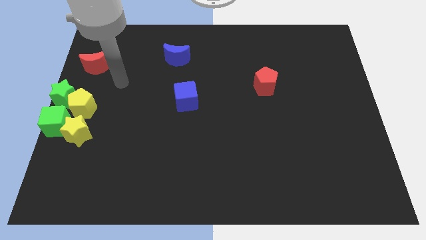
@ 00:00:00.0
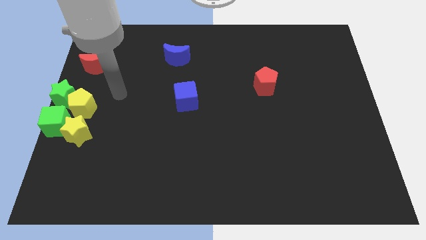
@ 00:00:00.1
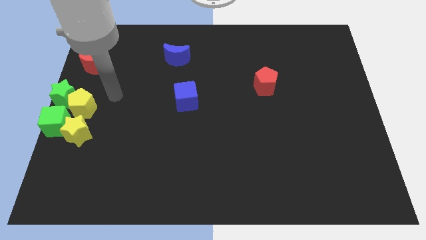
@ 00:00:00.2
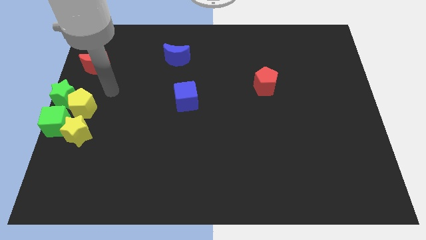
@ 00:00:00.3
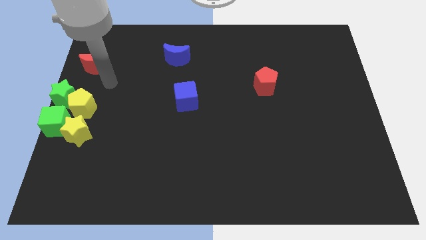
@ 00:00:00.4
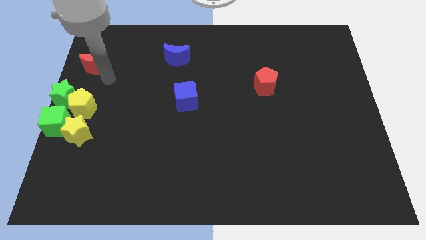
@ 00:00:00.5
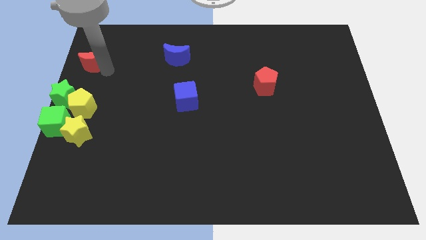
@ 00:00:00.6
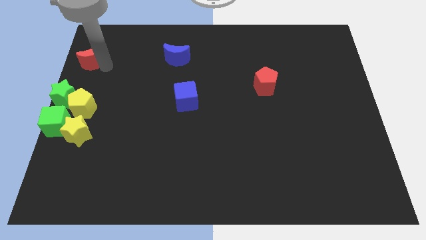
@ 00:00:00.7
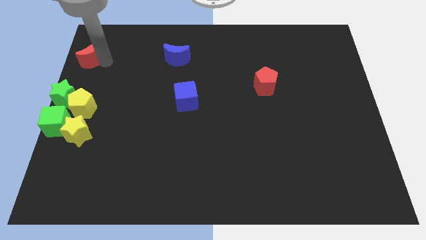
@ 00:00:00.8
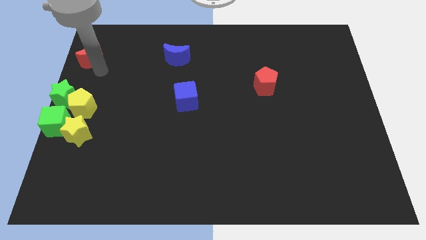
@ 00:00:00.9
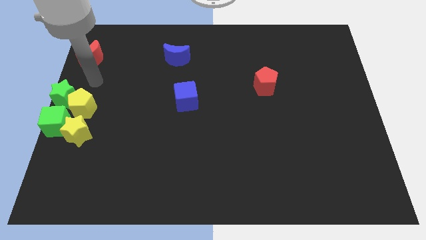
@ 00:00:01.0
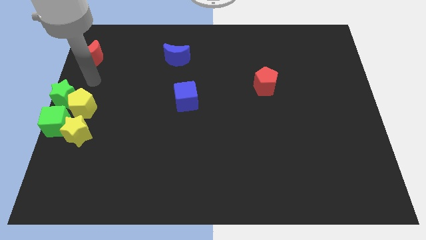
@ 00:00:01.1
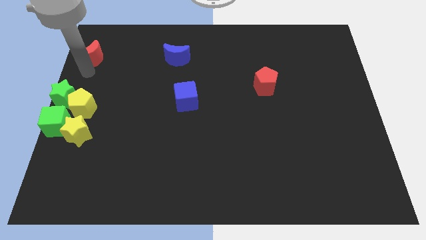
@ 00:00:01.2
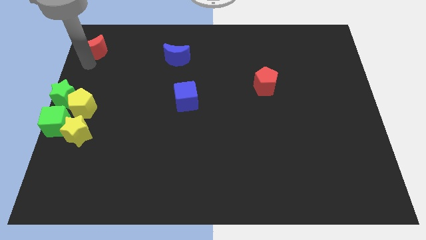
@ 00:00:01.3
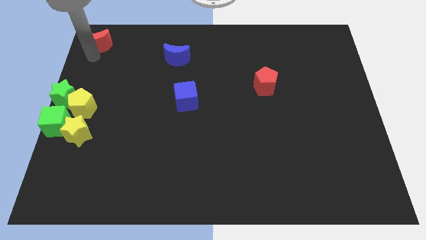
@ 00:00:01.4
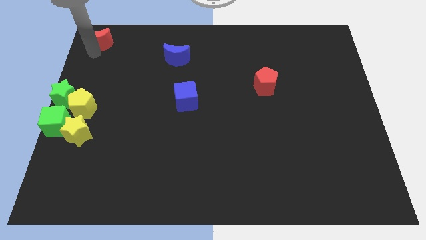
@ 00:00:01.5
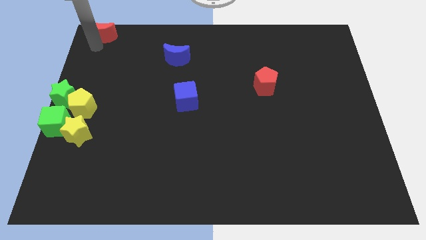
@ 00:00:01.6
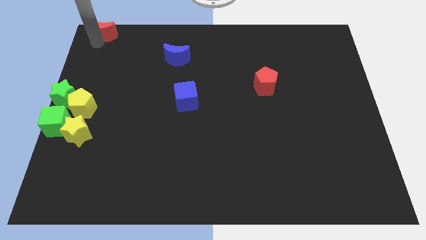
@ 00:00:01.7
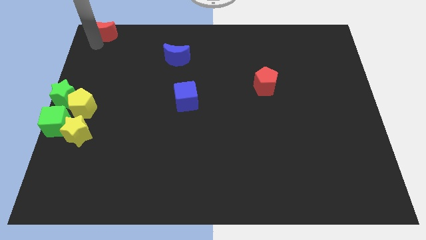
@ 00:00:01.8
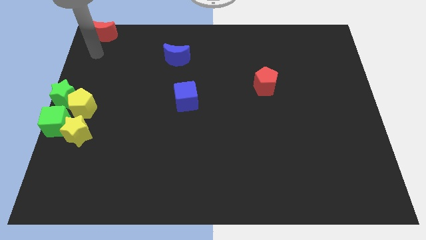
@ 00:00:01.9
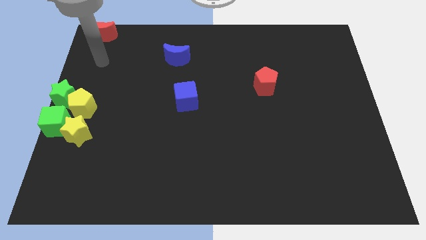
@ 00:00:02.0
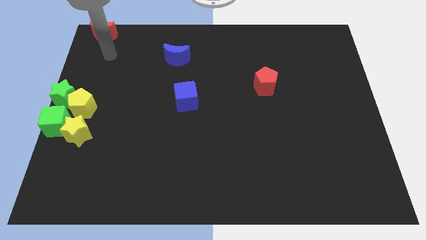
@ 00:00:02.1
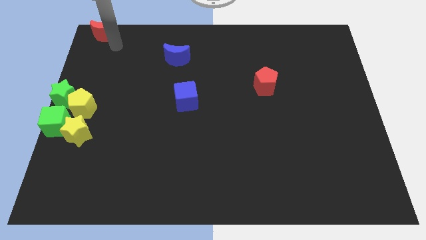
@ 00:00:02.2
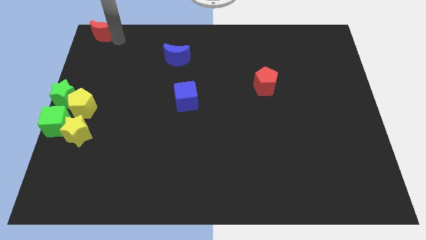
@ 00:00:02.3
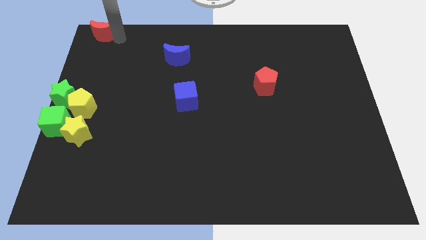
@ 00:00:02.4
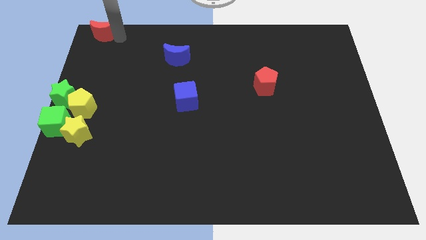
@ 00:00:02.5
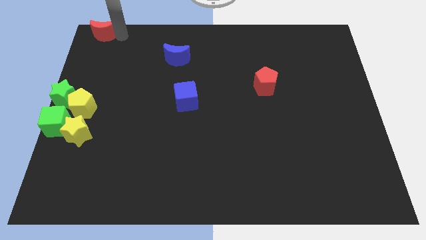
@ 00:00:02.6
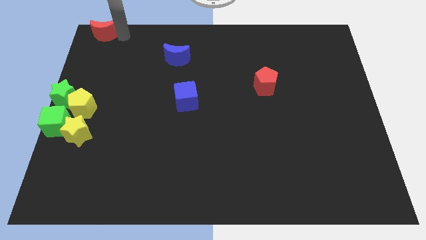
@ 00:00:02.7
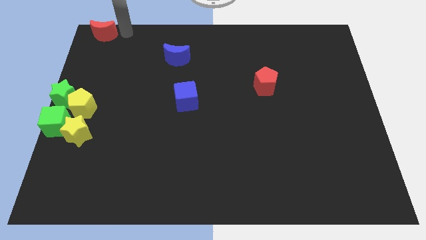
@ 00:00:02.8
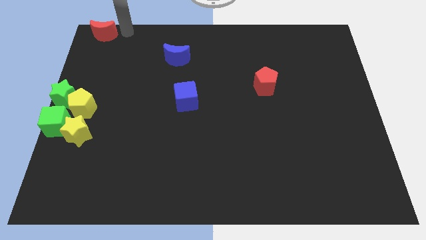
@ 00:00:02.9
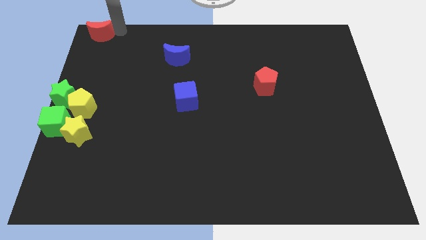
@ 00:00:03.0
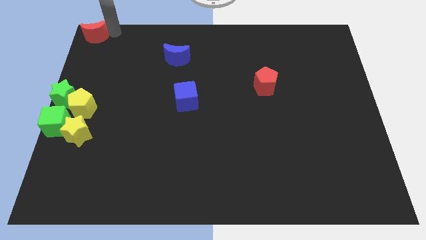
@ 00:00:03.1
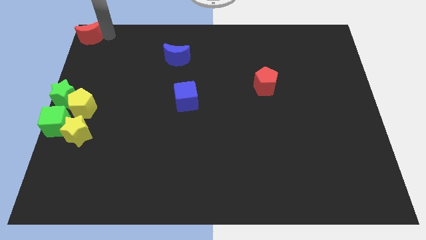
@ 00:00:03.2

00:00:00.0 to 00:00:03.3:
move the red crescent to the top left corner of the board

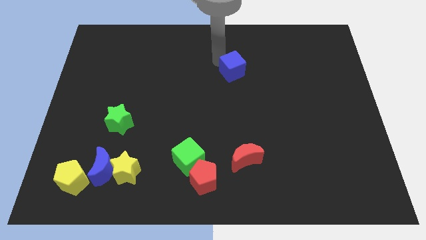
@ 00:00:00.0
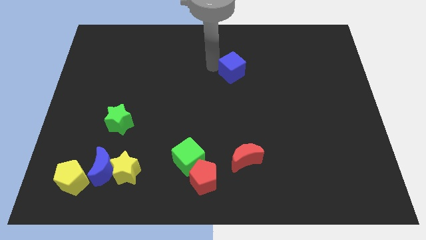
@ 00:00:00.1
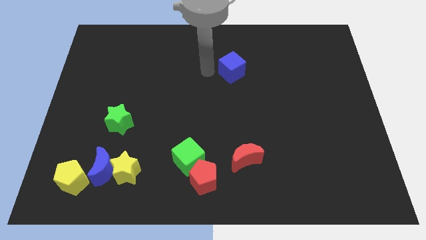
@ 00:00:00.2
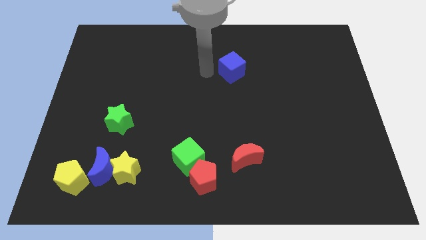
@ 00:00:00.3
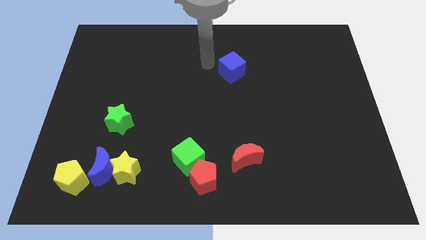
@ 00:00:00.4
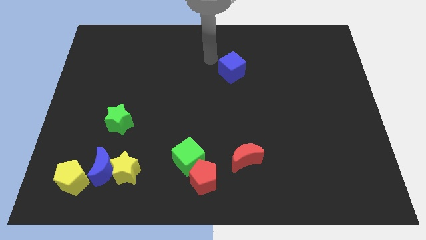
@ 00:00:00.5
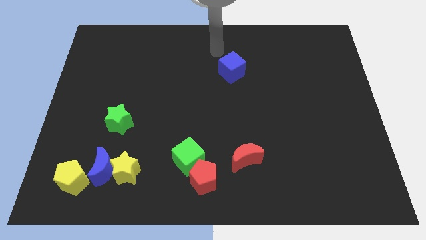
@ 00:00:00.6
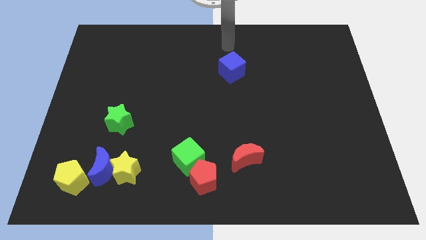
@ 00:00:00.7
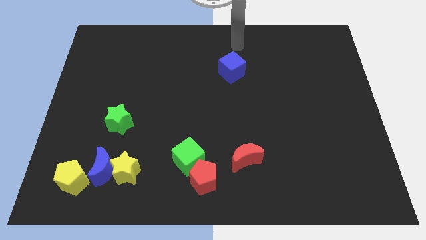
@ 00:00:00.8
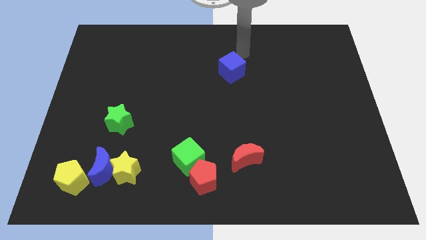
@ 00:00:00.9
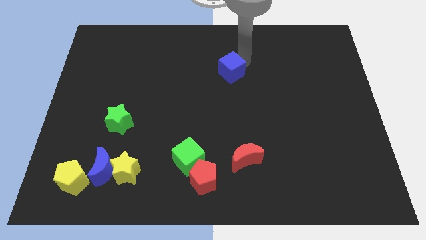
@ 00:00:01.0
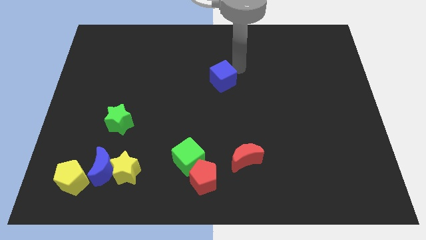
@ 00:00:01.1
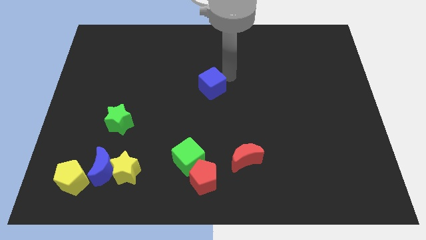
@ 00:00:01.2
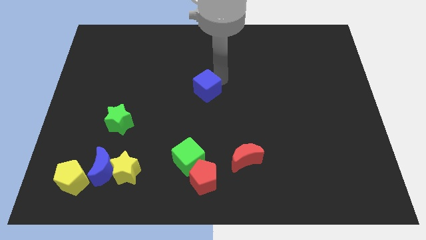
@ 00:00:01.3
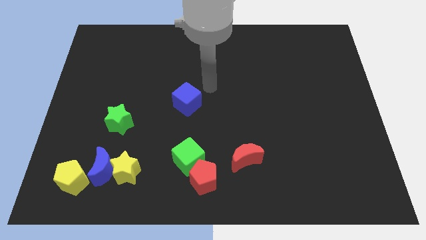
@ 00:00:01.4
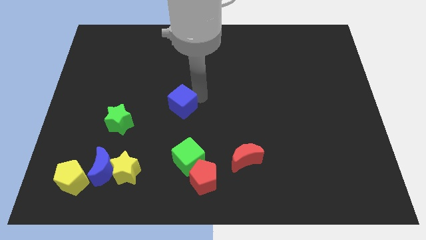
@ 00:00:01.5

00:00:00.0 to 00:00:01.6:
move the blue cube to the top side of the green cube

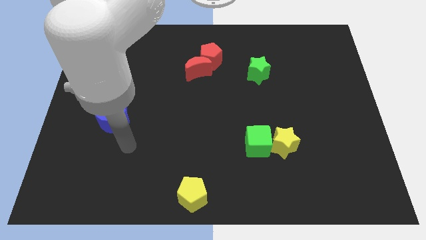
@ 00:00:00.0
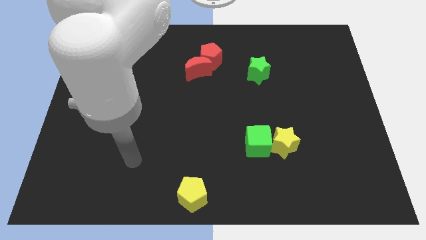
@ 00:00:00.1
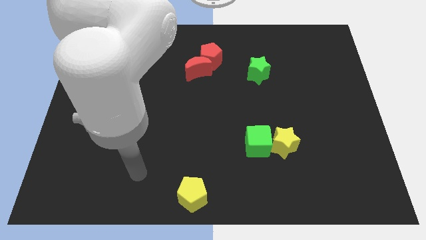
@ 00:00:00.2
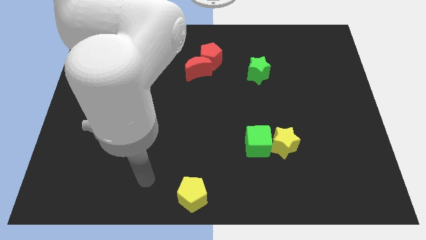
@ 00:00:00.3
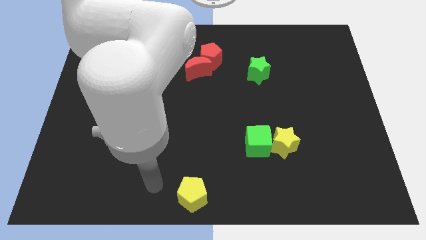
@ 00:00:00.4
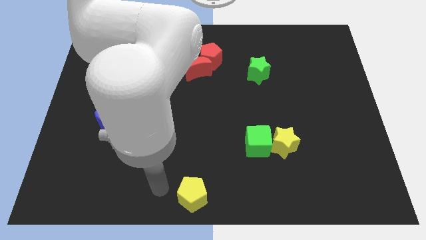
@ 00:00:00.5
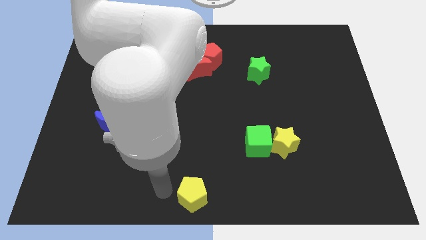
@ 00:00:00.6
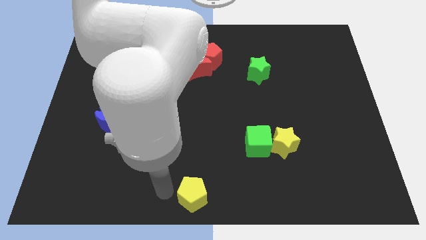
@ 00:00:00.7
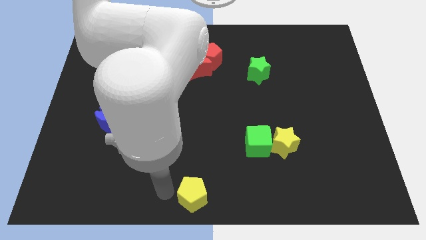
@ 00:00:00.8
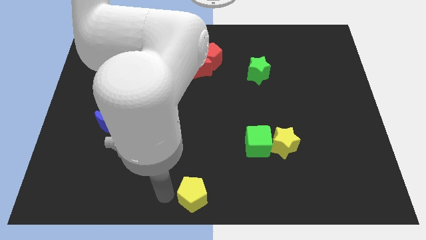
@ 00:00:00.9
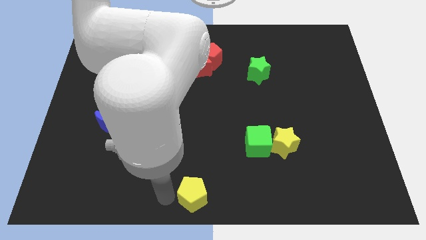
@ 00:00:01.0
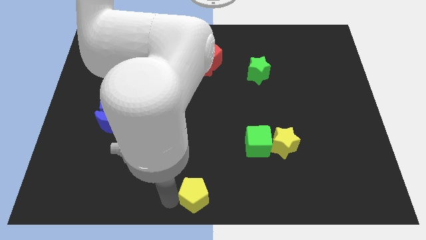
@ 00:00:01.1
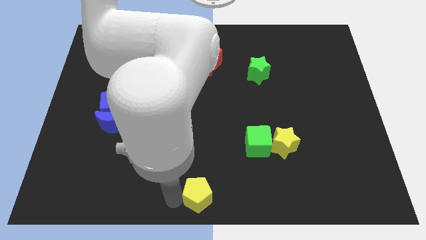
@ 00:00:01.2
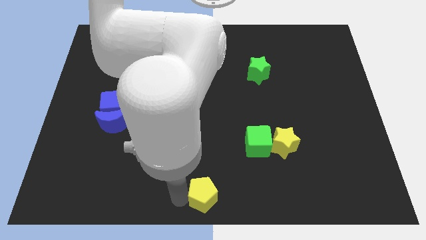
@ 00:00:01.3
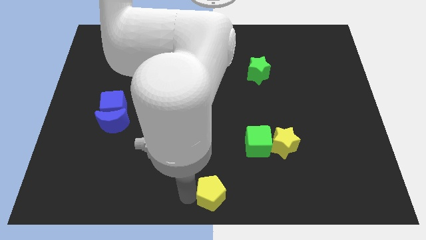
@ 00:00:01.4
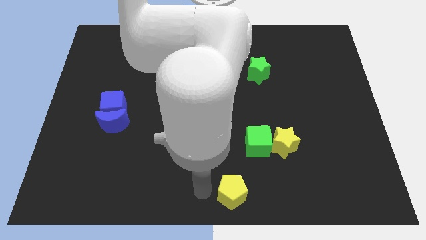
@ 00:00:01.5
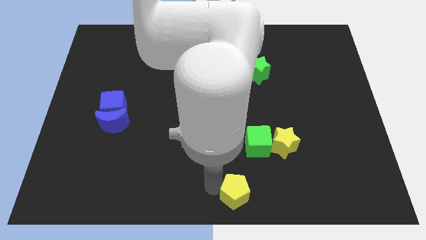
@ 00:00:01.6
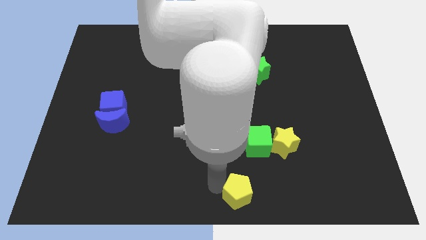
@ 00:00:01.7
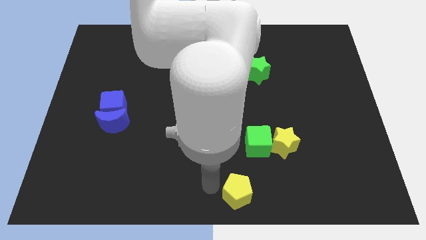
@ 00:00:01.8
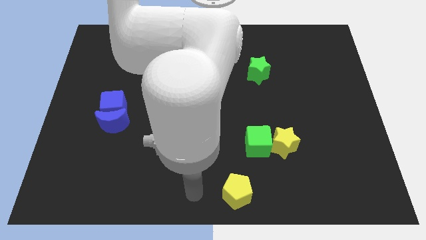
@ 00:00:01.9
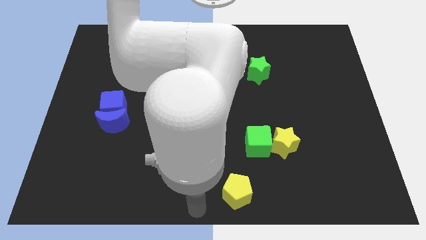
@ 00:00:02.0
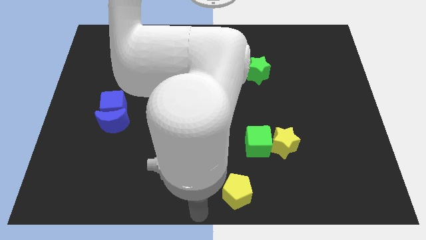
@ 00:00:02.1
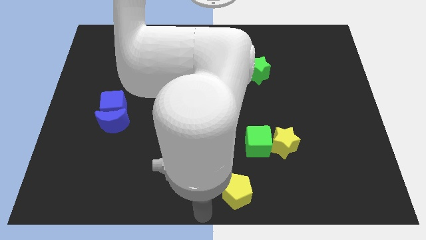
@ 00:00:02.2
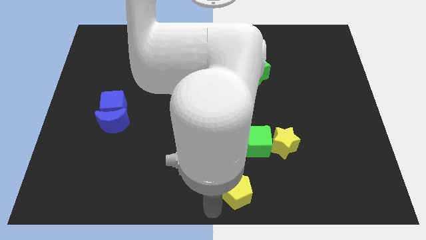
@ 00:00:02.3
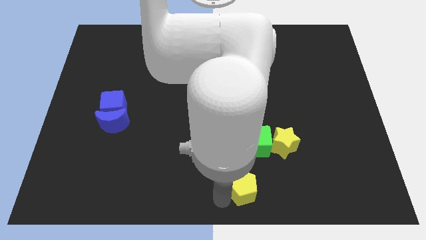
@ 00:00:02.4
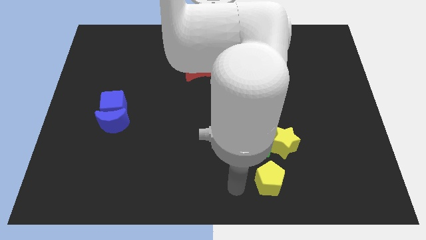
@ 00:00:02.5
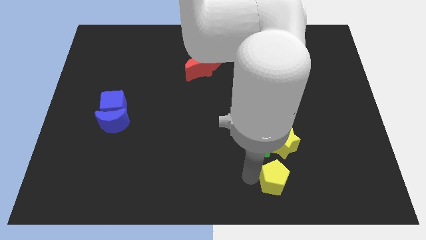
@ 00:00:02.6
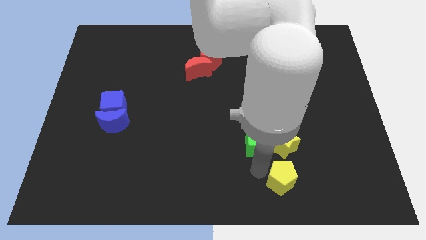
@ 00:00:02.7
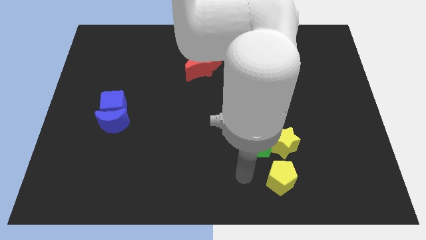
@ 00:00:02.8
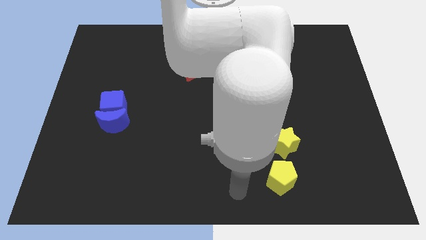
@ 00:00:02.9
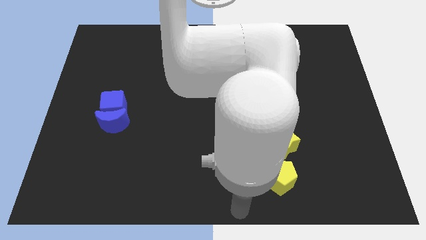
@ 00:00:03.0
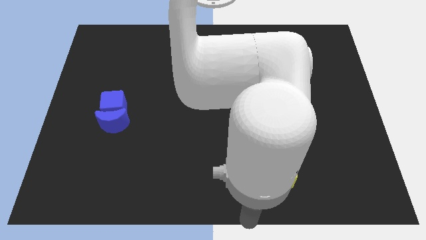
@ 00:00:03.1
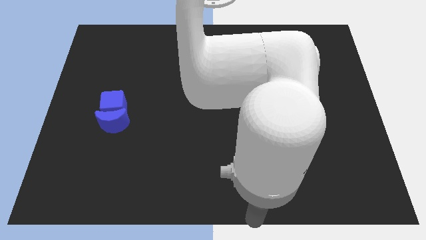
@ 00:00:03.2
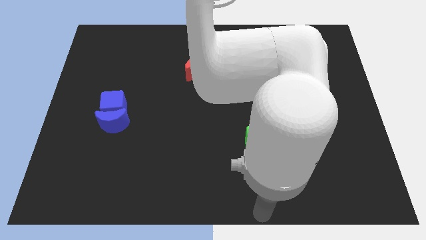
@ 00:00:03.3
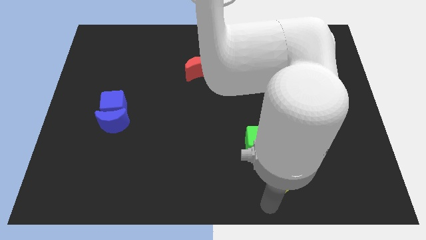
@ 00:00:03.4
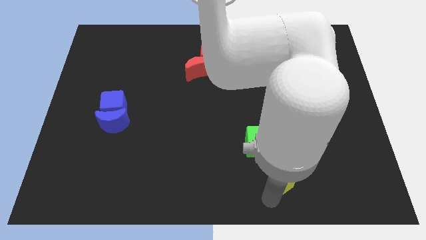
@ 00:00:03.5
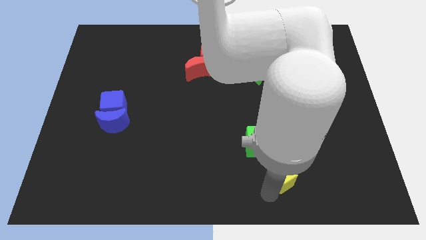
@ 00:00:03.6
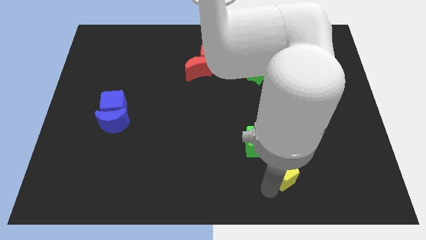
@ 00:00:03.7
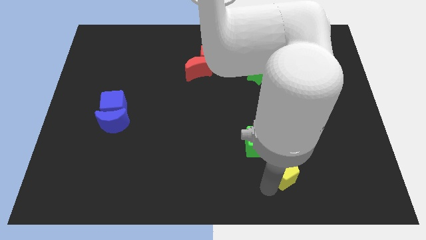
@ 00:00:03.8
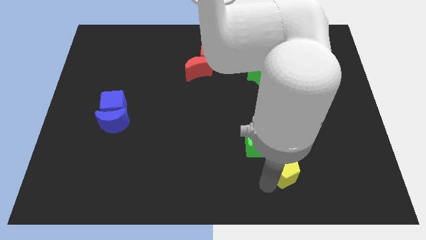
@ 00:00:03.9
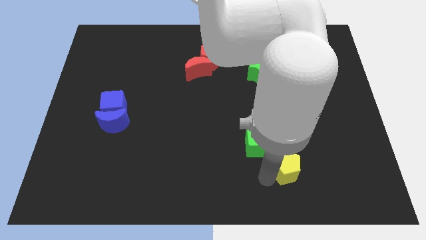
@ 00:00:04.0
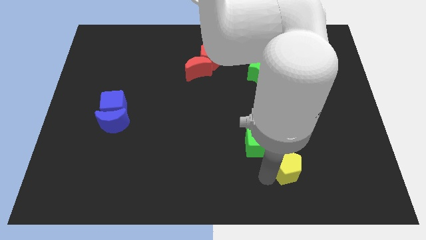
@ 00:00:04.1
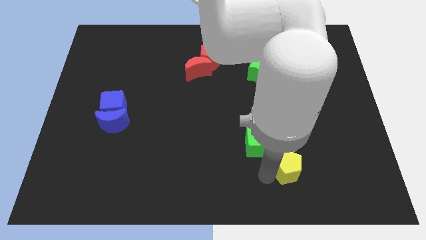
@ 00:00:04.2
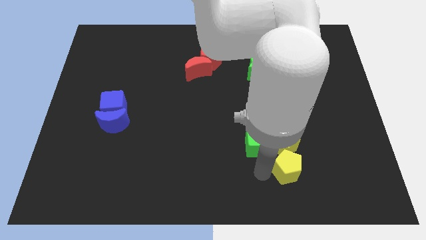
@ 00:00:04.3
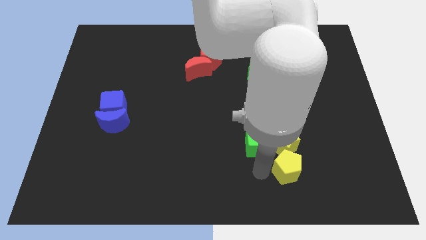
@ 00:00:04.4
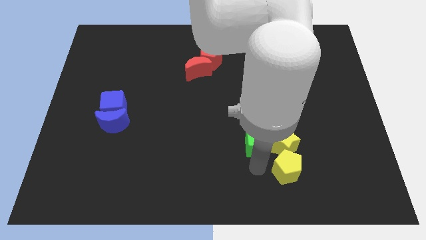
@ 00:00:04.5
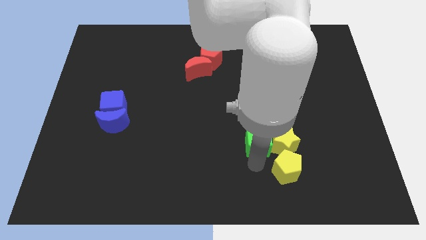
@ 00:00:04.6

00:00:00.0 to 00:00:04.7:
push the yellow pentagon to the right side of the board
